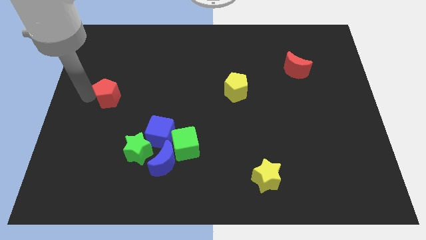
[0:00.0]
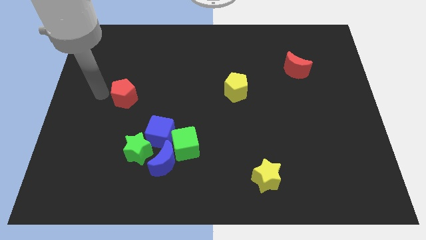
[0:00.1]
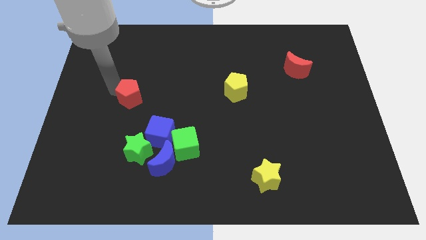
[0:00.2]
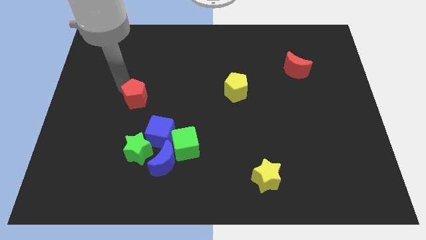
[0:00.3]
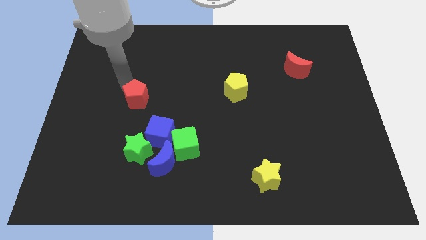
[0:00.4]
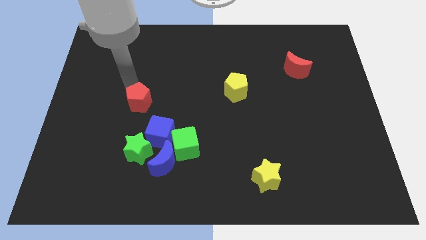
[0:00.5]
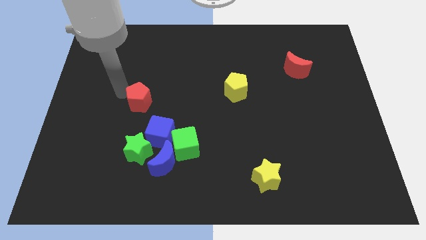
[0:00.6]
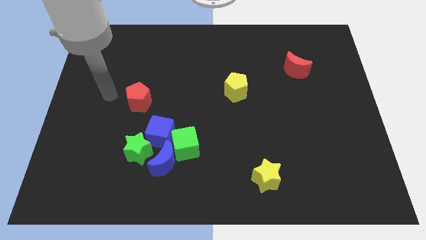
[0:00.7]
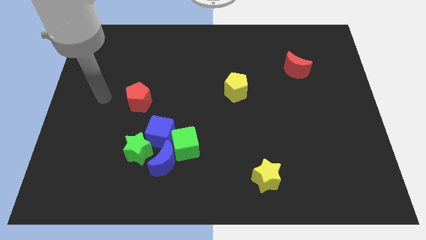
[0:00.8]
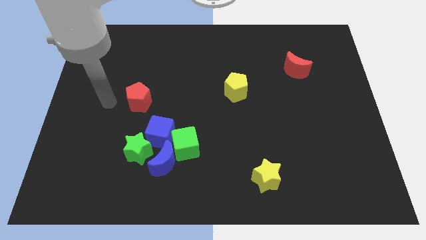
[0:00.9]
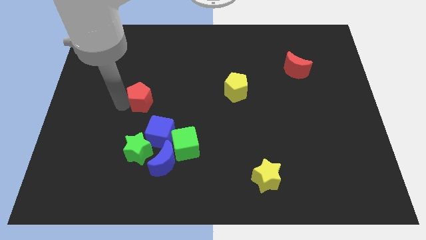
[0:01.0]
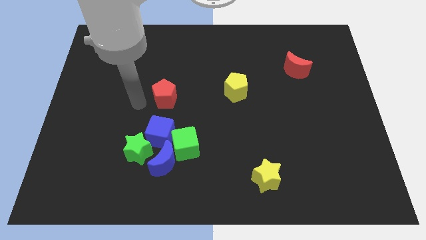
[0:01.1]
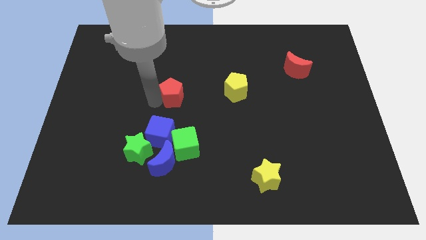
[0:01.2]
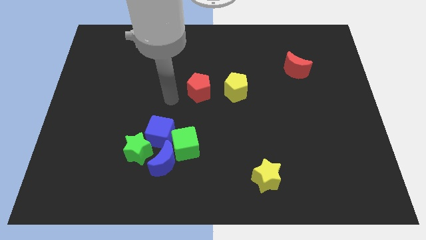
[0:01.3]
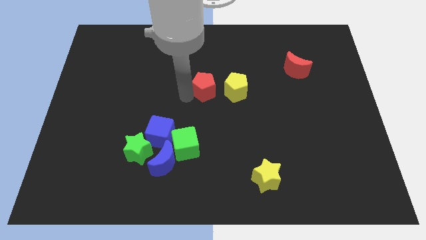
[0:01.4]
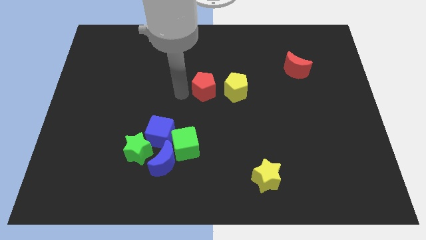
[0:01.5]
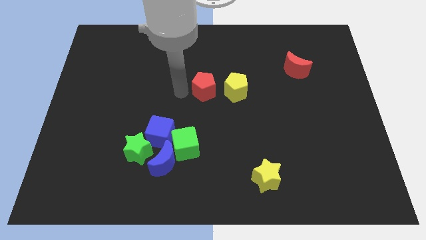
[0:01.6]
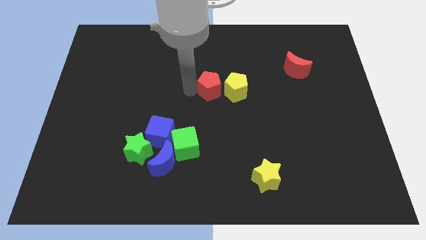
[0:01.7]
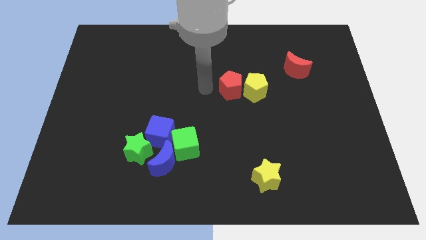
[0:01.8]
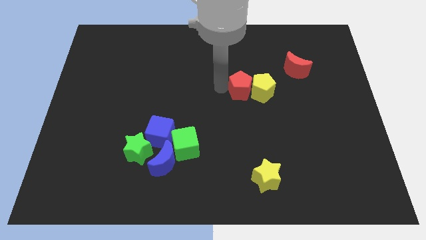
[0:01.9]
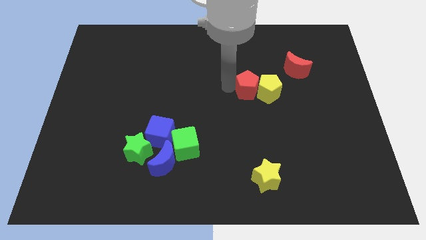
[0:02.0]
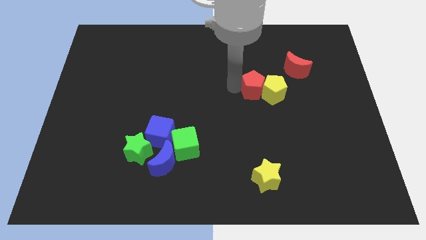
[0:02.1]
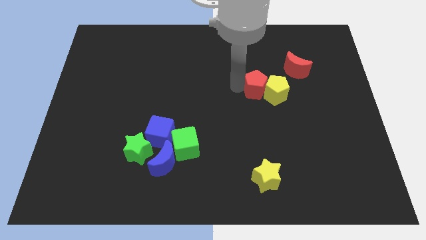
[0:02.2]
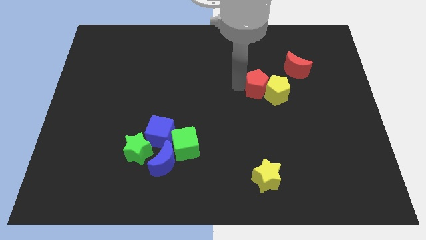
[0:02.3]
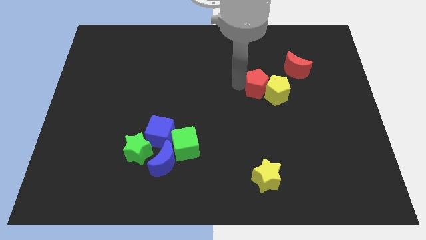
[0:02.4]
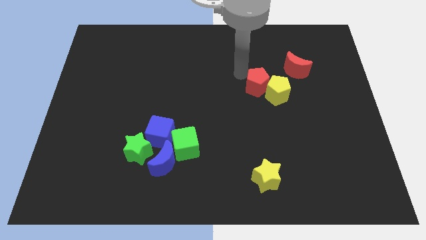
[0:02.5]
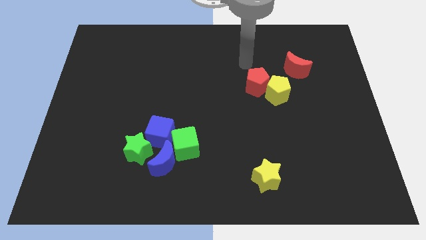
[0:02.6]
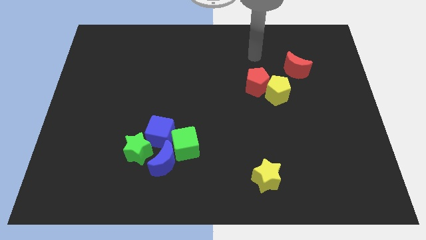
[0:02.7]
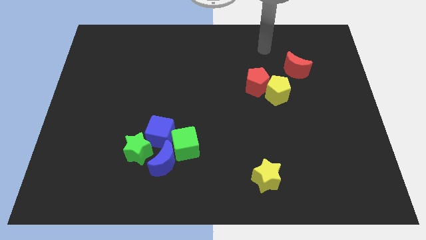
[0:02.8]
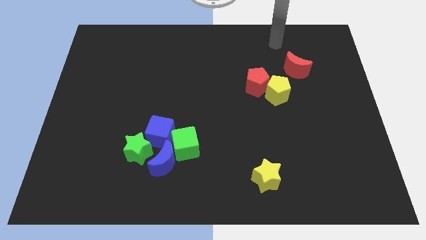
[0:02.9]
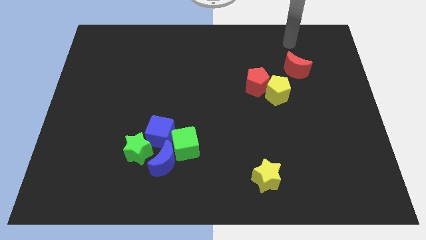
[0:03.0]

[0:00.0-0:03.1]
push the red pentagon into the yellow pentagon

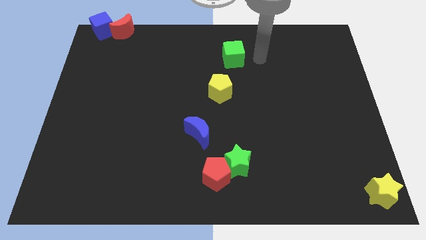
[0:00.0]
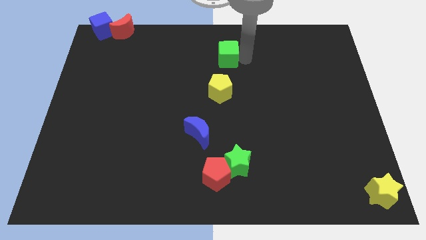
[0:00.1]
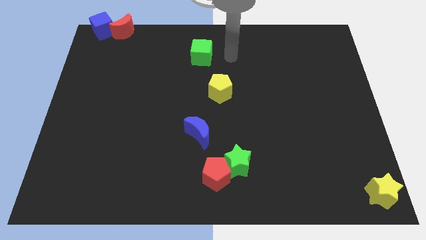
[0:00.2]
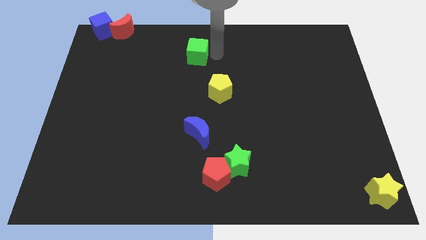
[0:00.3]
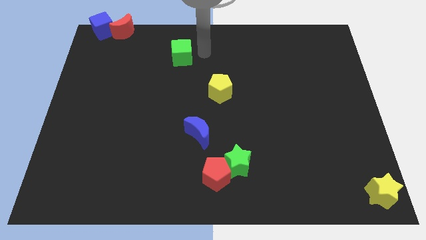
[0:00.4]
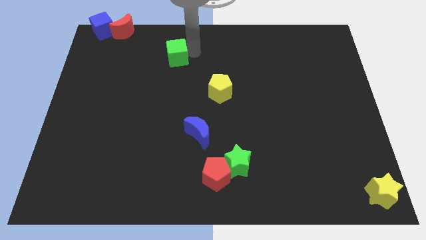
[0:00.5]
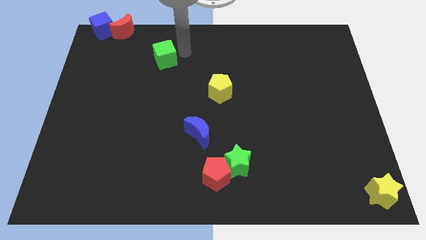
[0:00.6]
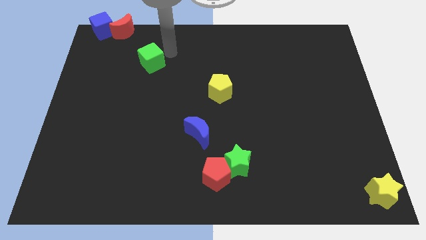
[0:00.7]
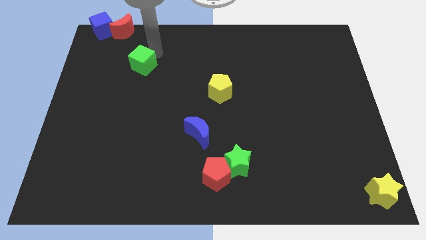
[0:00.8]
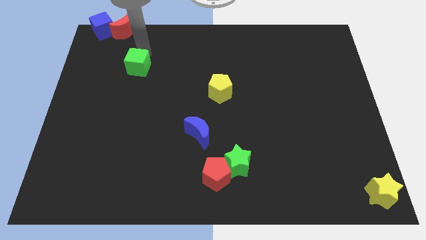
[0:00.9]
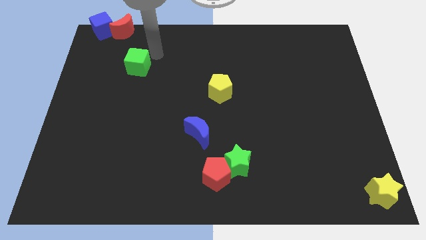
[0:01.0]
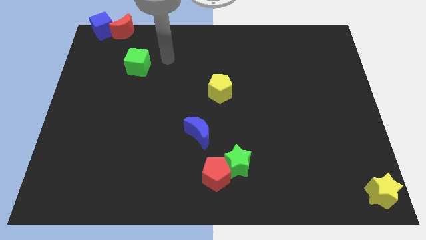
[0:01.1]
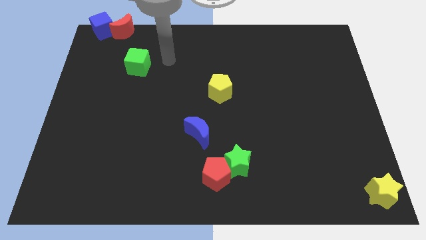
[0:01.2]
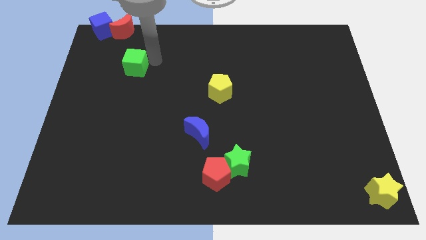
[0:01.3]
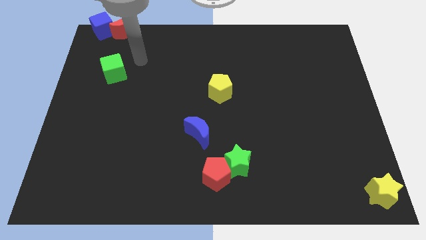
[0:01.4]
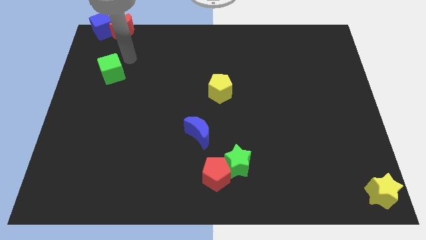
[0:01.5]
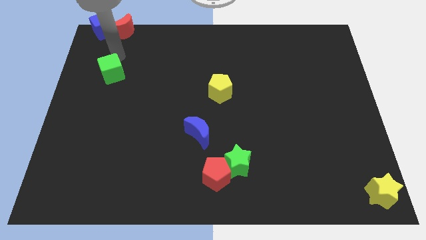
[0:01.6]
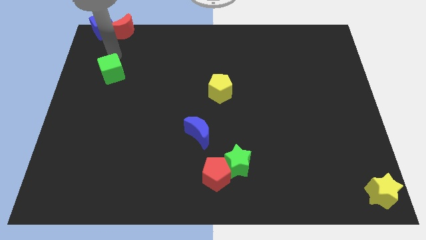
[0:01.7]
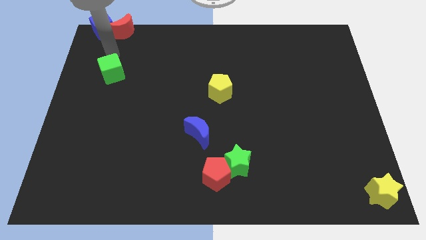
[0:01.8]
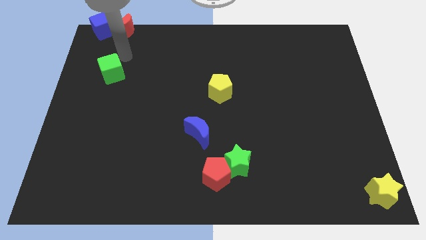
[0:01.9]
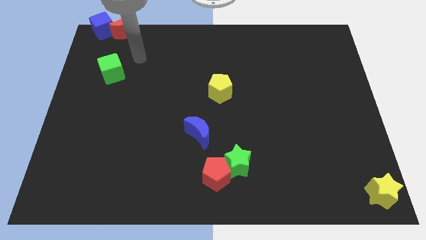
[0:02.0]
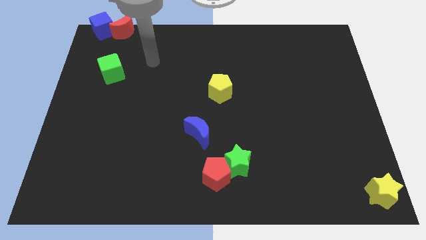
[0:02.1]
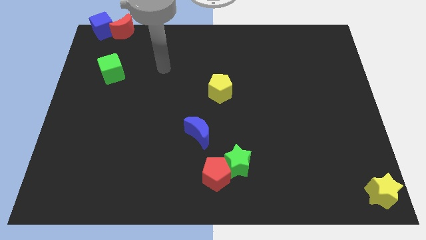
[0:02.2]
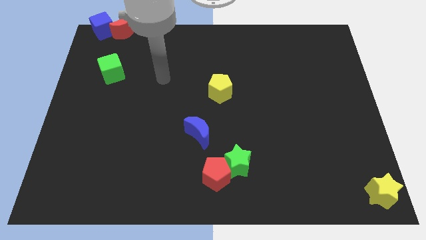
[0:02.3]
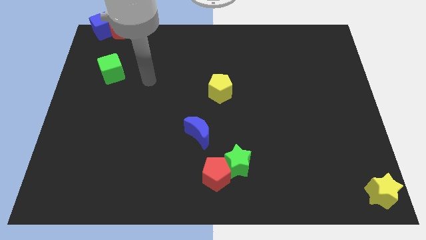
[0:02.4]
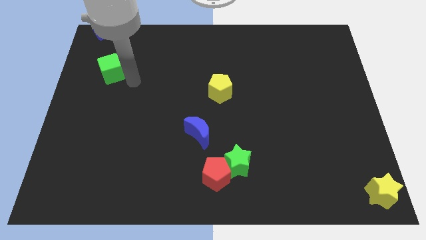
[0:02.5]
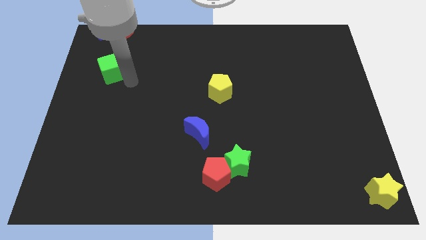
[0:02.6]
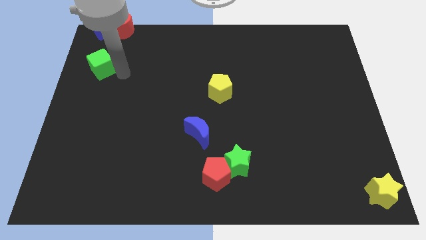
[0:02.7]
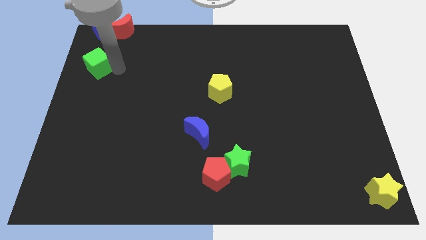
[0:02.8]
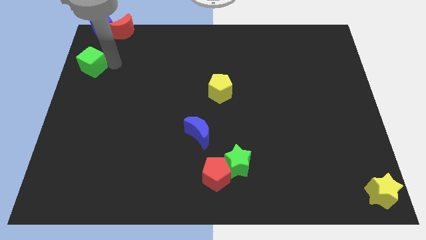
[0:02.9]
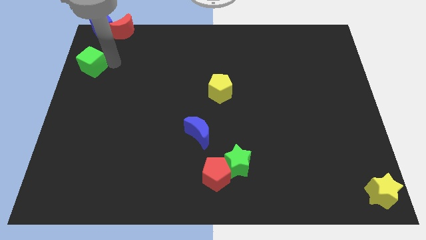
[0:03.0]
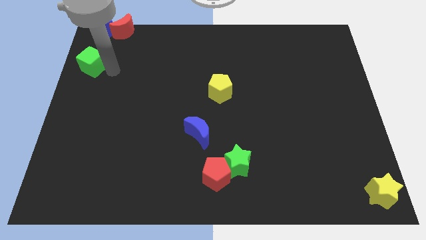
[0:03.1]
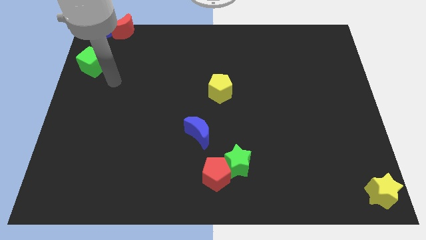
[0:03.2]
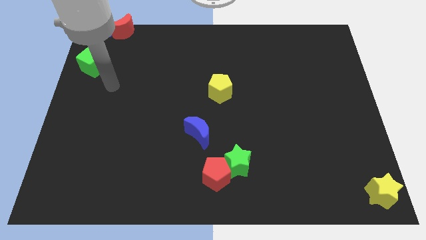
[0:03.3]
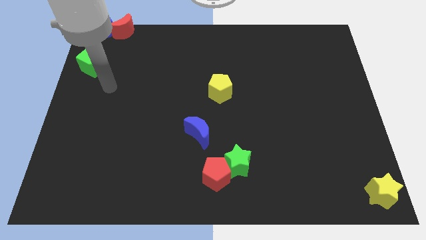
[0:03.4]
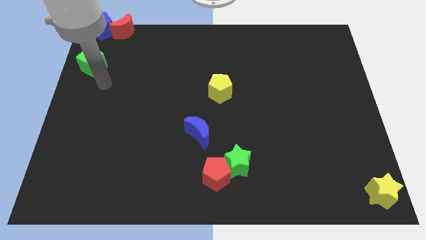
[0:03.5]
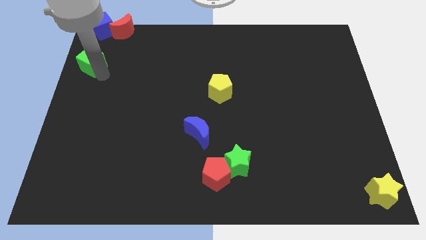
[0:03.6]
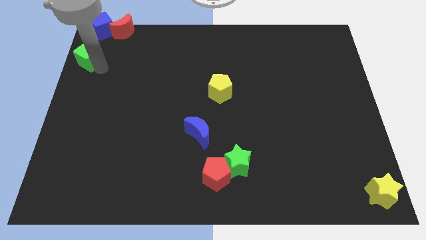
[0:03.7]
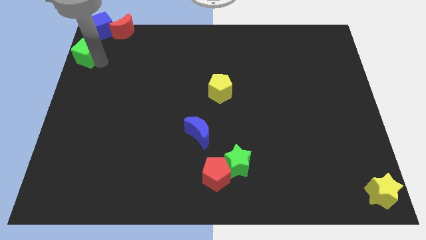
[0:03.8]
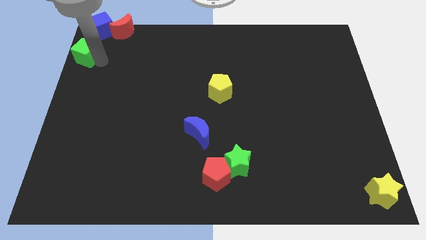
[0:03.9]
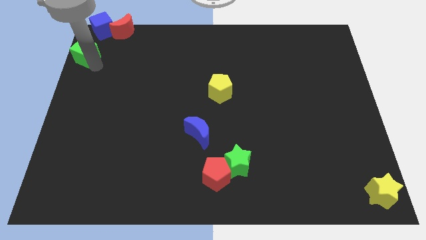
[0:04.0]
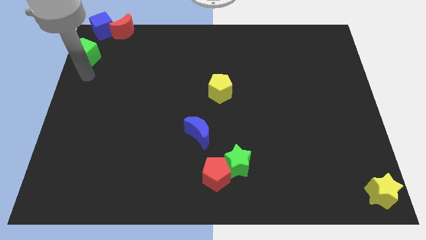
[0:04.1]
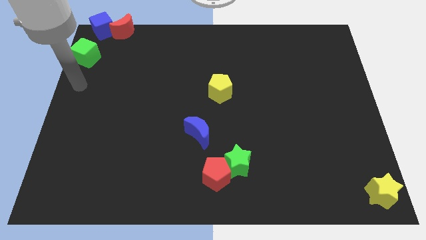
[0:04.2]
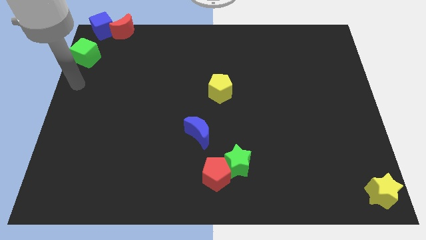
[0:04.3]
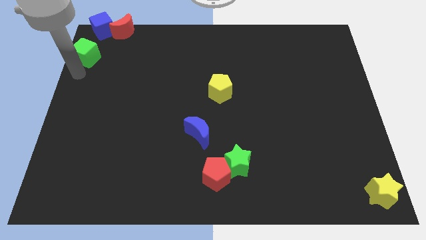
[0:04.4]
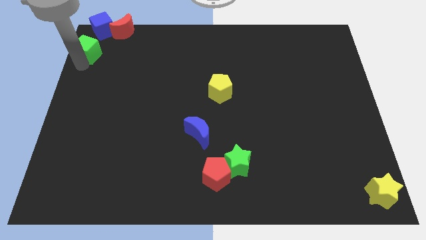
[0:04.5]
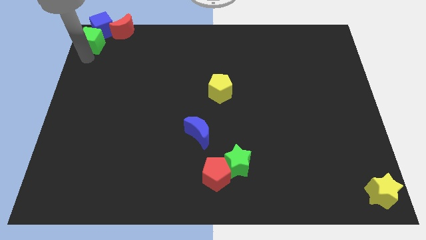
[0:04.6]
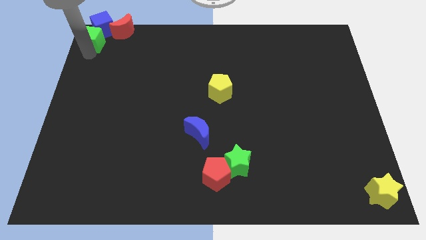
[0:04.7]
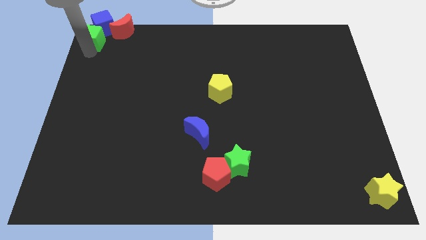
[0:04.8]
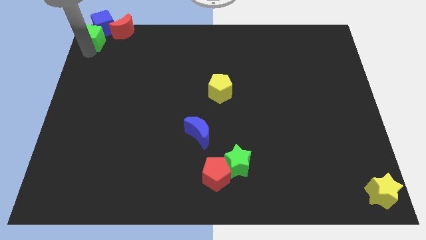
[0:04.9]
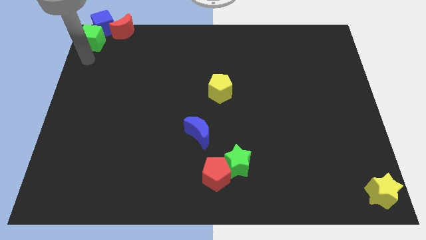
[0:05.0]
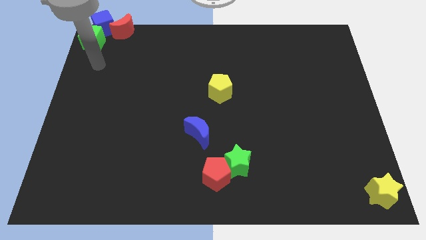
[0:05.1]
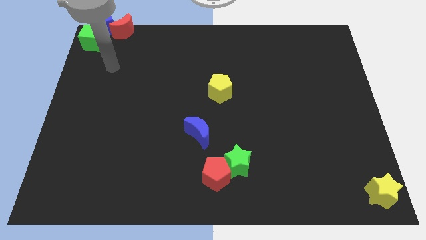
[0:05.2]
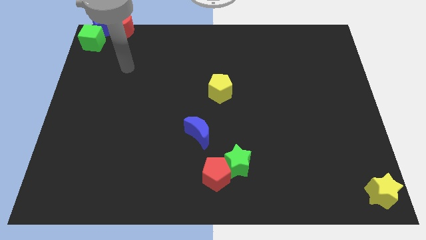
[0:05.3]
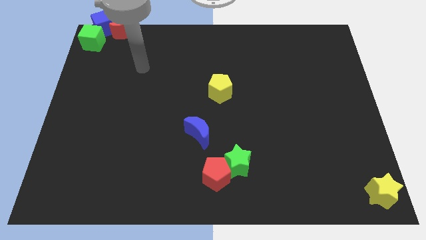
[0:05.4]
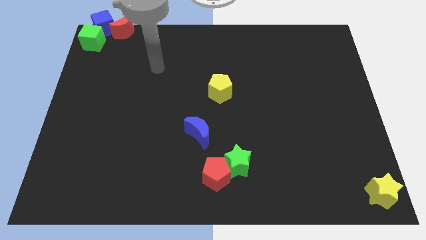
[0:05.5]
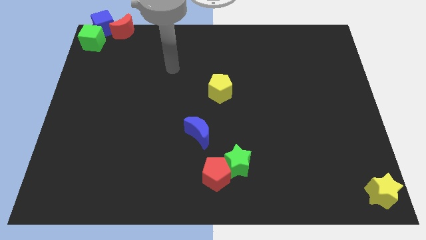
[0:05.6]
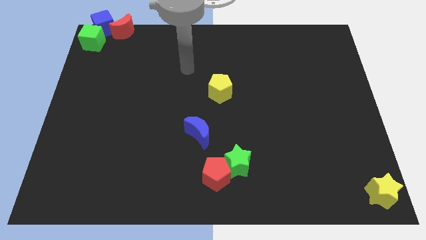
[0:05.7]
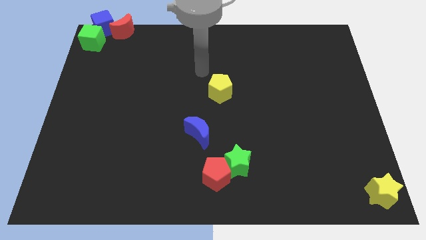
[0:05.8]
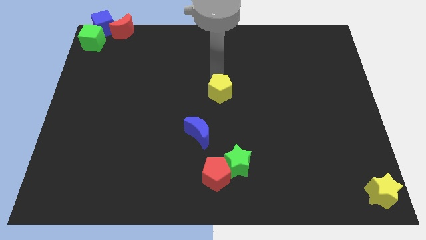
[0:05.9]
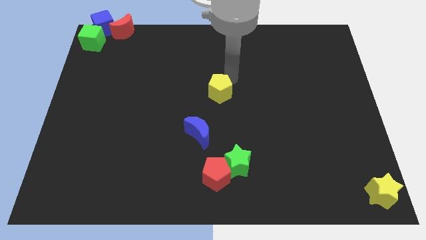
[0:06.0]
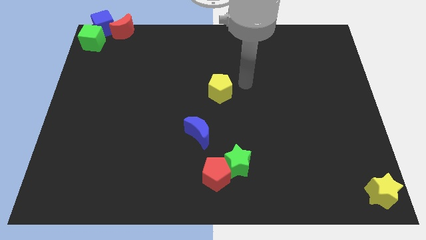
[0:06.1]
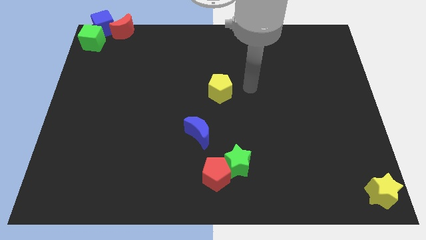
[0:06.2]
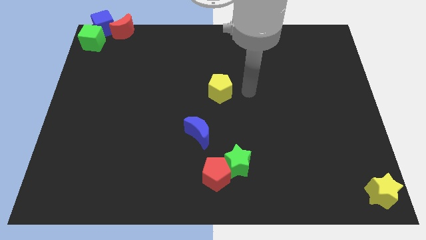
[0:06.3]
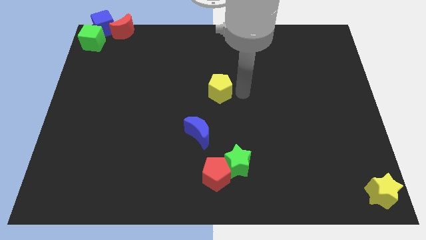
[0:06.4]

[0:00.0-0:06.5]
place the green cube near the blue cube to the left top corner
